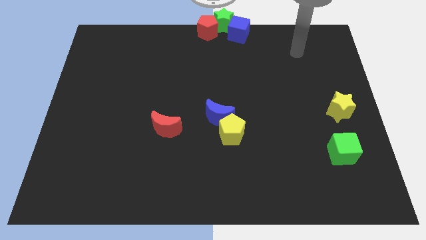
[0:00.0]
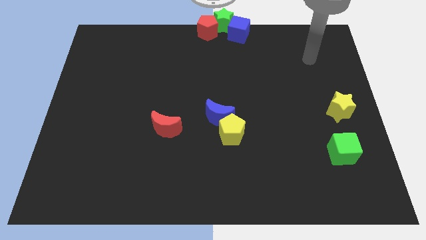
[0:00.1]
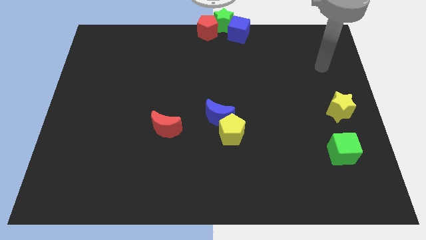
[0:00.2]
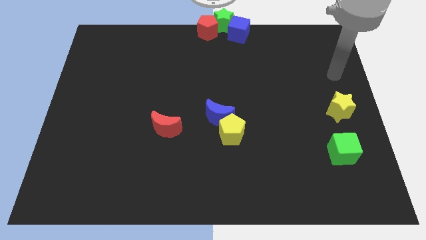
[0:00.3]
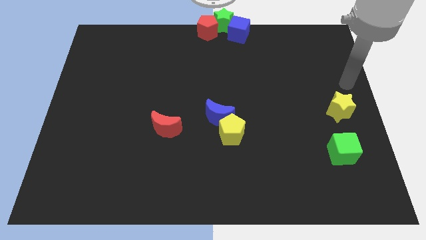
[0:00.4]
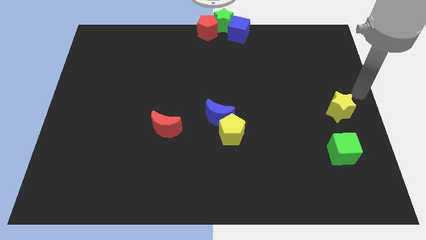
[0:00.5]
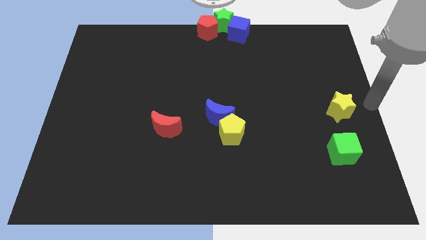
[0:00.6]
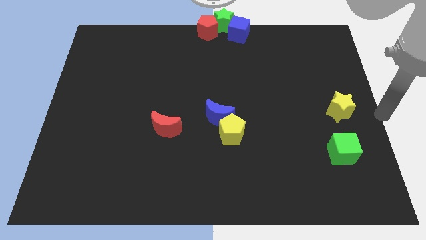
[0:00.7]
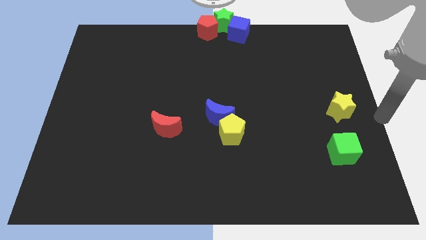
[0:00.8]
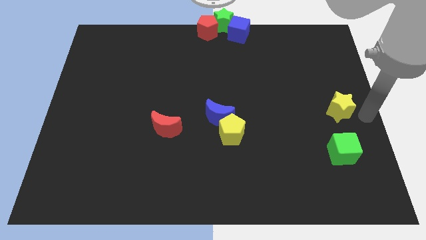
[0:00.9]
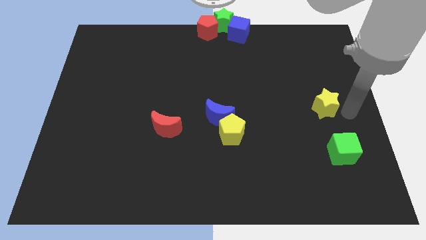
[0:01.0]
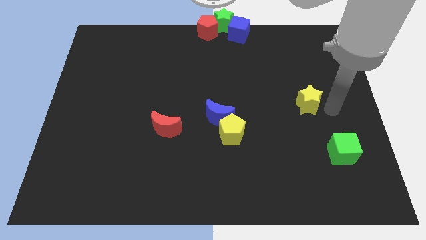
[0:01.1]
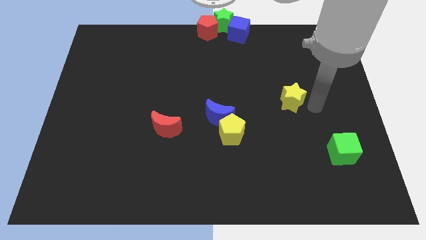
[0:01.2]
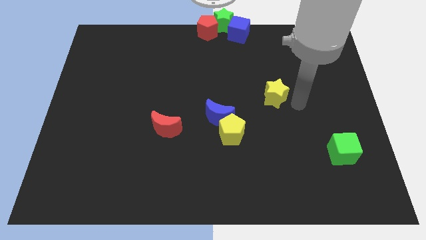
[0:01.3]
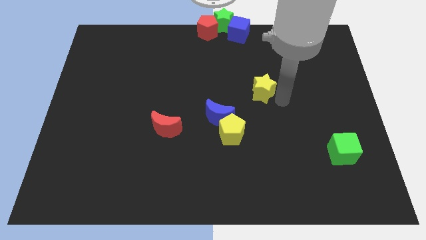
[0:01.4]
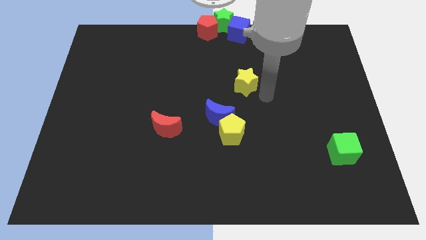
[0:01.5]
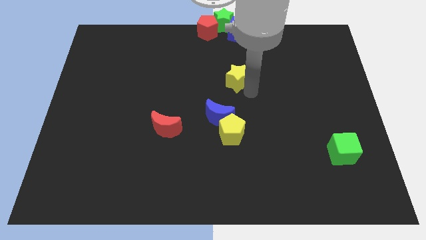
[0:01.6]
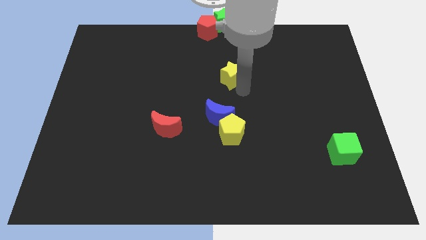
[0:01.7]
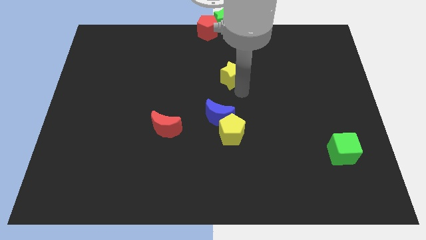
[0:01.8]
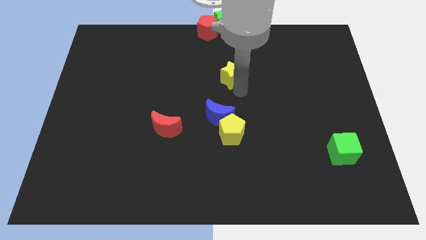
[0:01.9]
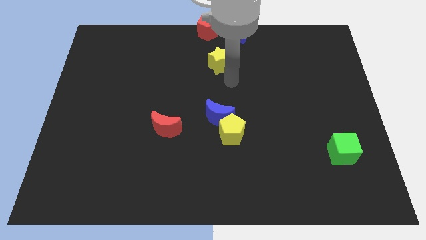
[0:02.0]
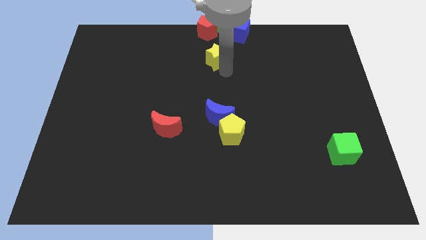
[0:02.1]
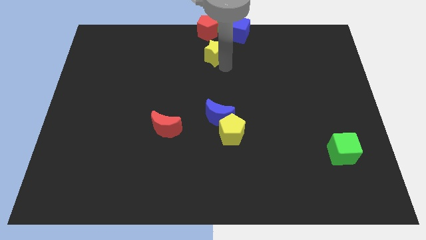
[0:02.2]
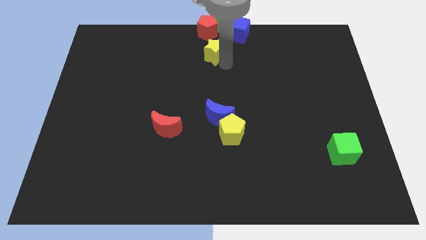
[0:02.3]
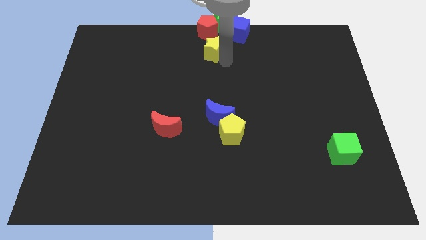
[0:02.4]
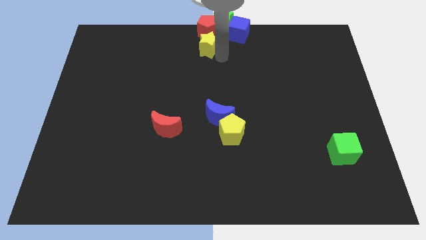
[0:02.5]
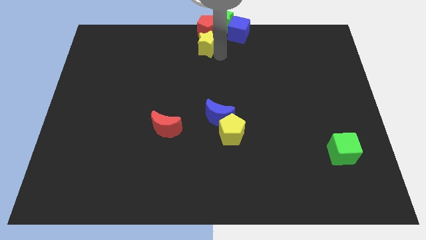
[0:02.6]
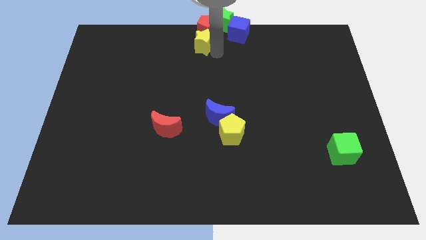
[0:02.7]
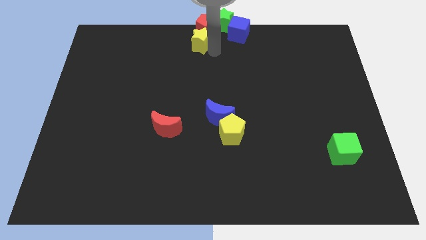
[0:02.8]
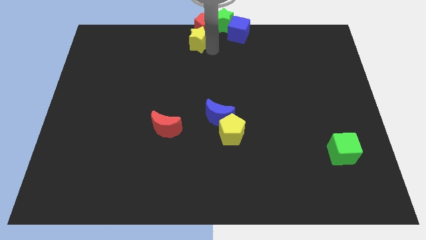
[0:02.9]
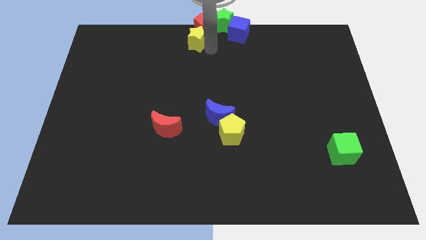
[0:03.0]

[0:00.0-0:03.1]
push the yellow star into the red pentagon

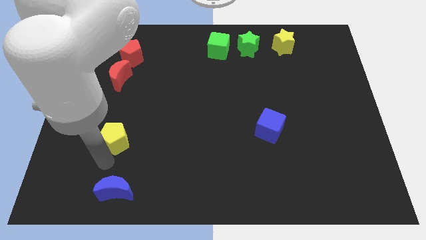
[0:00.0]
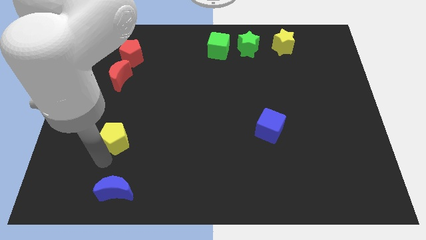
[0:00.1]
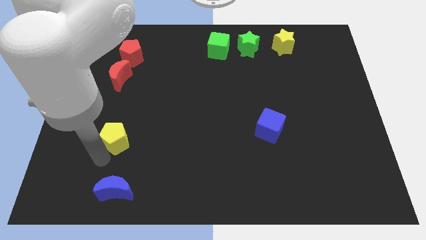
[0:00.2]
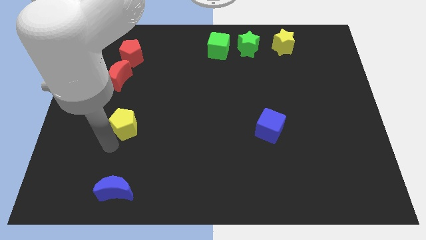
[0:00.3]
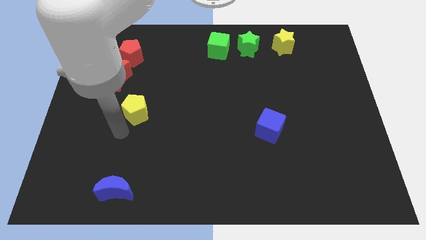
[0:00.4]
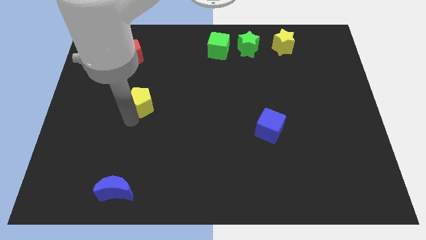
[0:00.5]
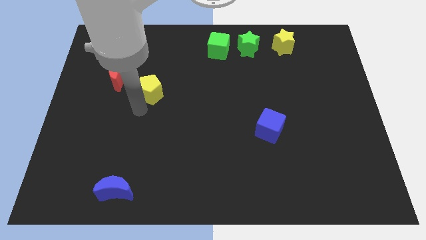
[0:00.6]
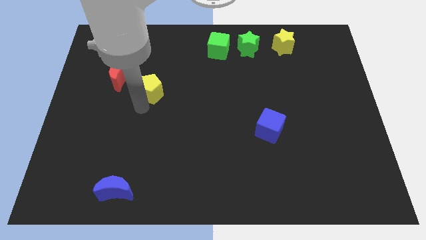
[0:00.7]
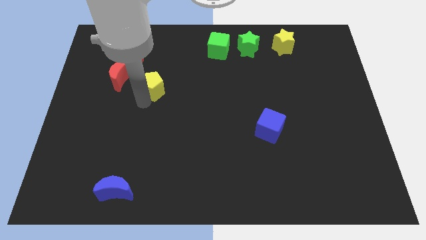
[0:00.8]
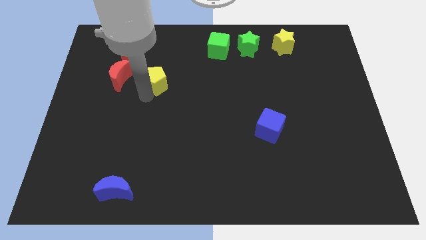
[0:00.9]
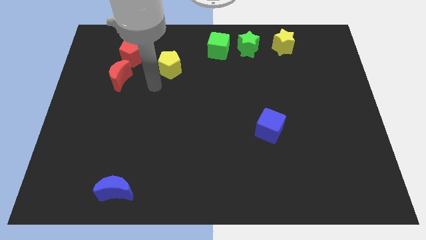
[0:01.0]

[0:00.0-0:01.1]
place the yellow pentagon right to the red moon

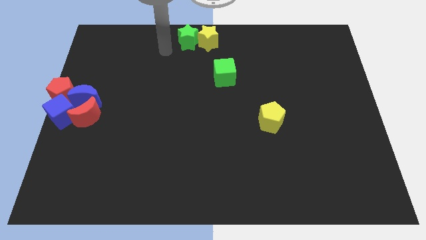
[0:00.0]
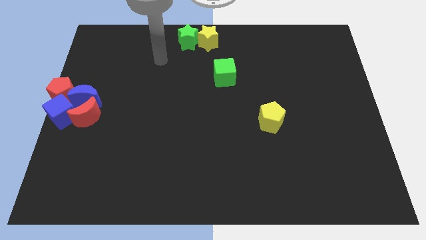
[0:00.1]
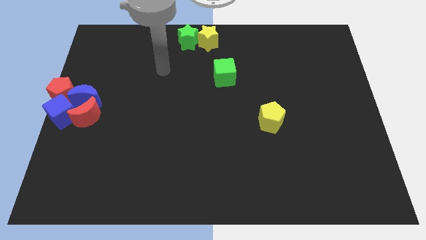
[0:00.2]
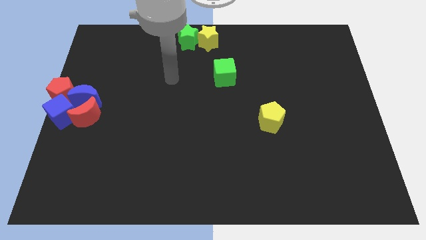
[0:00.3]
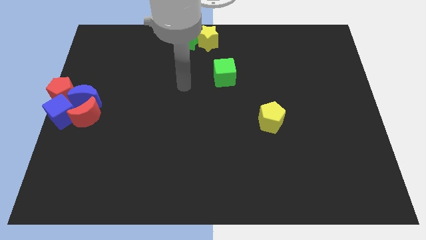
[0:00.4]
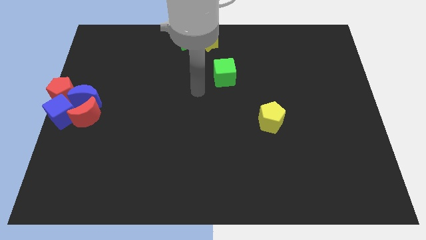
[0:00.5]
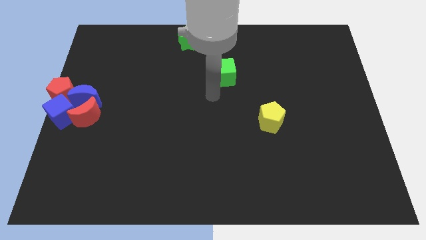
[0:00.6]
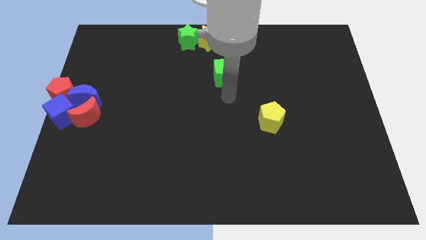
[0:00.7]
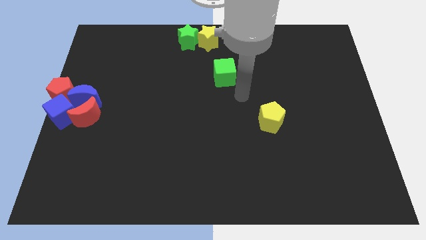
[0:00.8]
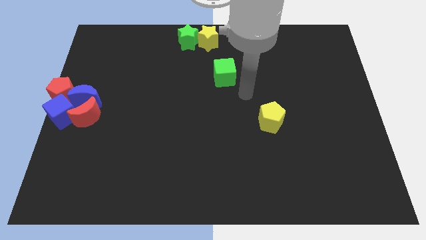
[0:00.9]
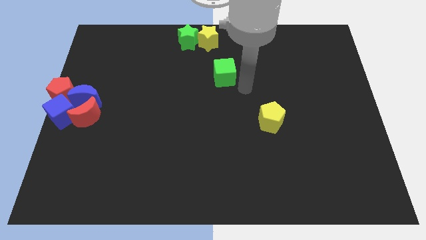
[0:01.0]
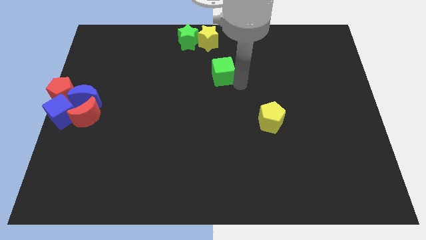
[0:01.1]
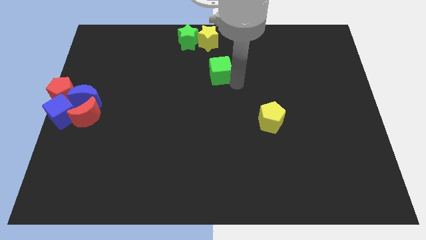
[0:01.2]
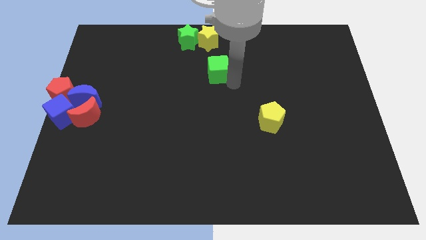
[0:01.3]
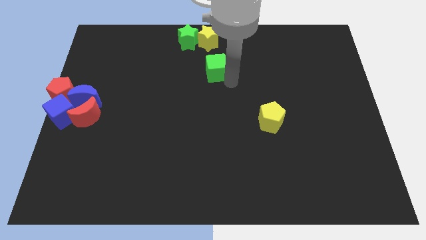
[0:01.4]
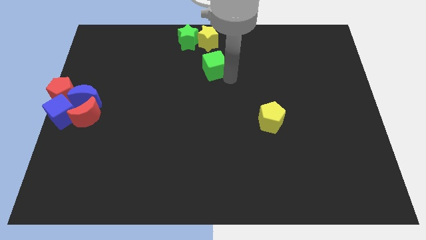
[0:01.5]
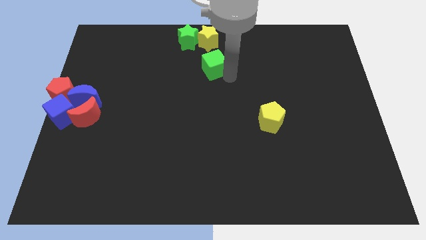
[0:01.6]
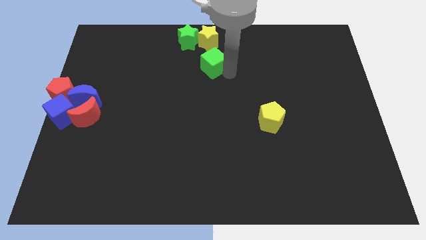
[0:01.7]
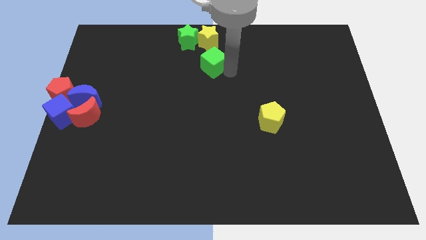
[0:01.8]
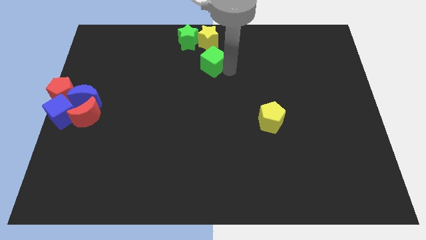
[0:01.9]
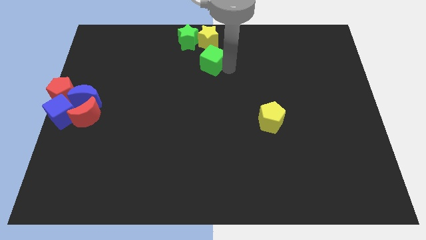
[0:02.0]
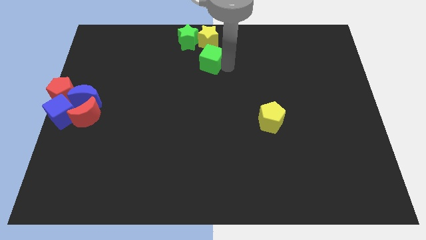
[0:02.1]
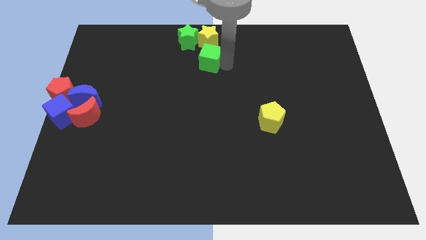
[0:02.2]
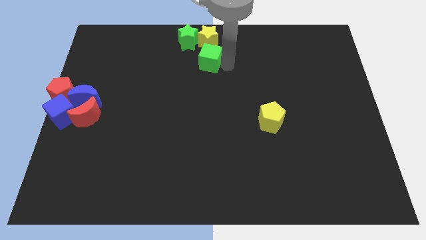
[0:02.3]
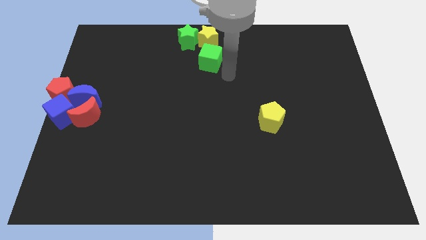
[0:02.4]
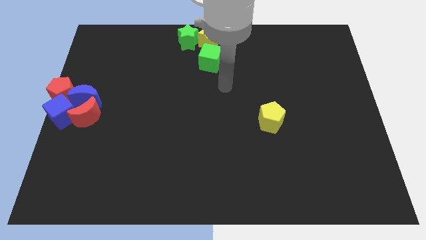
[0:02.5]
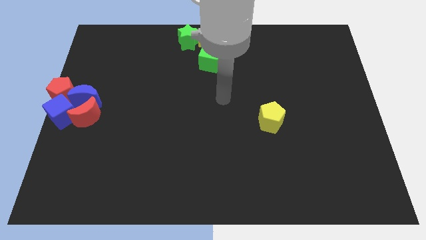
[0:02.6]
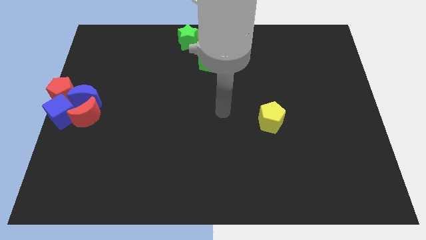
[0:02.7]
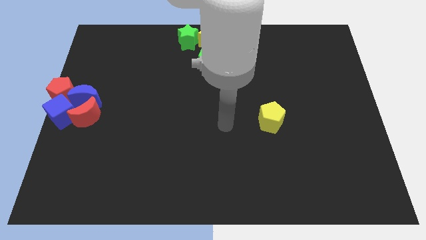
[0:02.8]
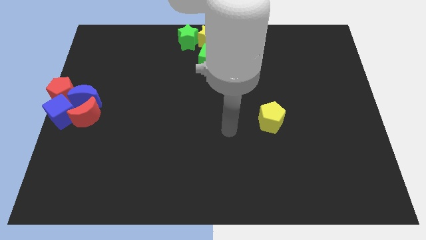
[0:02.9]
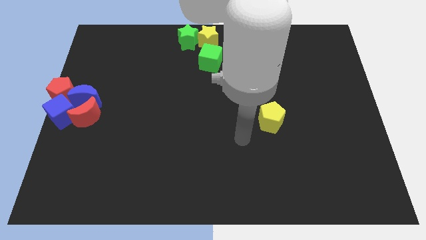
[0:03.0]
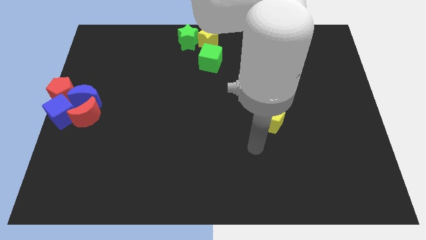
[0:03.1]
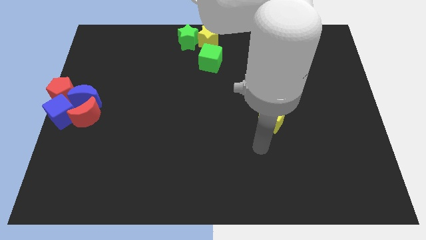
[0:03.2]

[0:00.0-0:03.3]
place the green cube below the yellow star

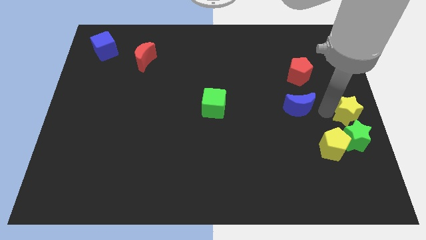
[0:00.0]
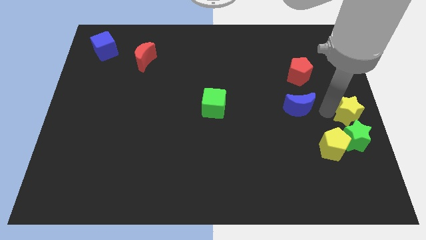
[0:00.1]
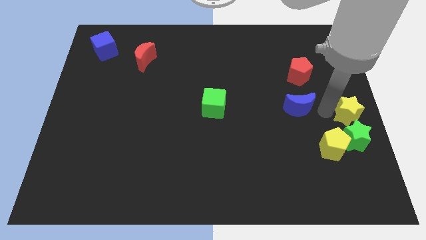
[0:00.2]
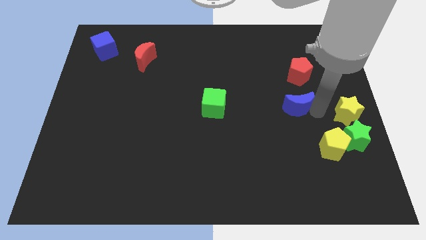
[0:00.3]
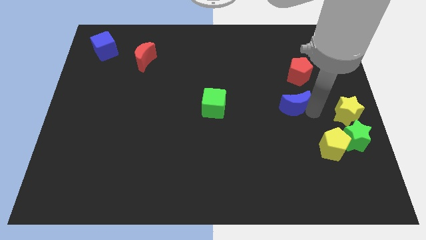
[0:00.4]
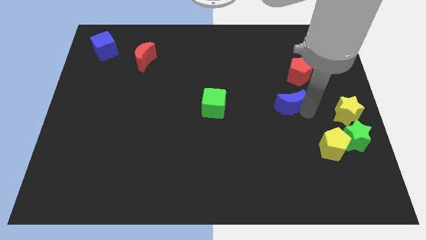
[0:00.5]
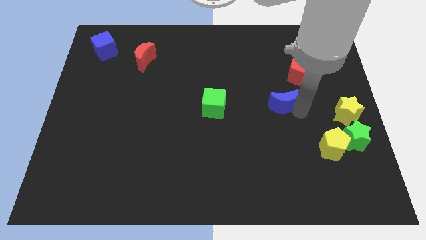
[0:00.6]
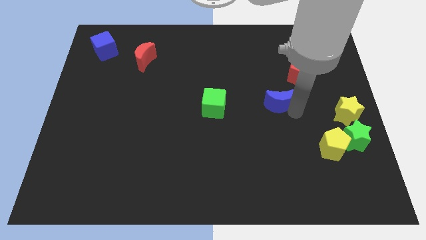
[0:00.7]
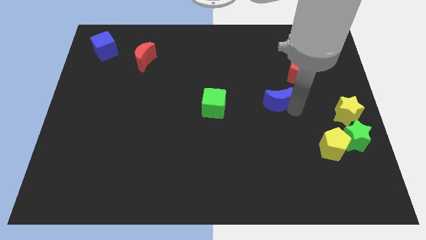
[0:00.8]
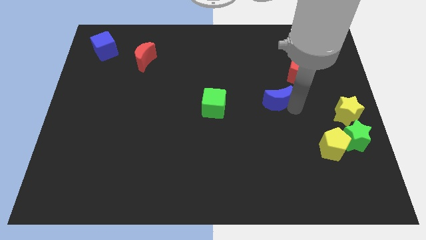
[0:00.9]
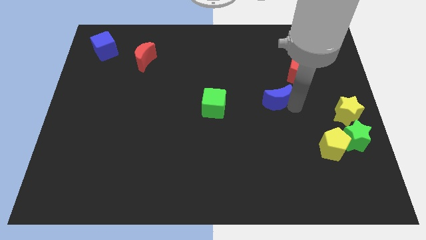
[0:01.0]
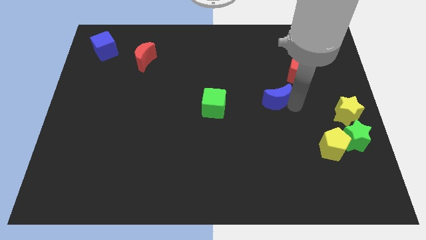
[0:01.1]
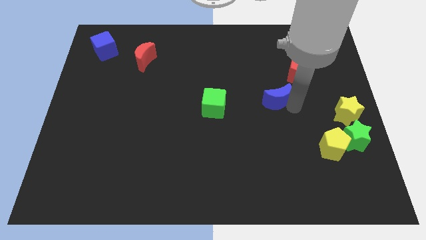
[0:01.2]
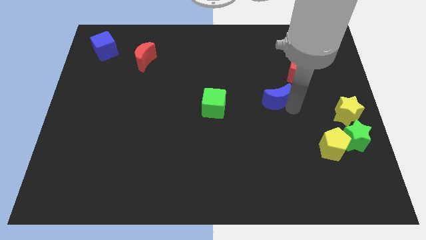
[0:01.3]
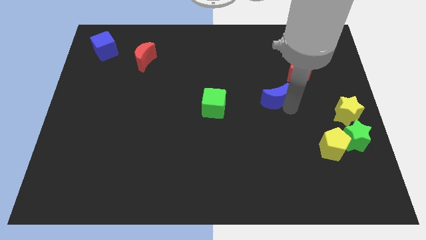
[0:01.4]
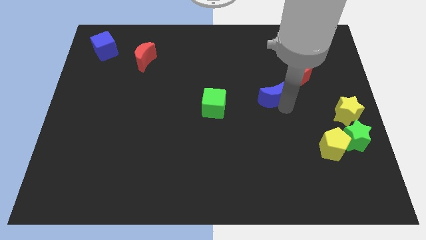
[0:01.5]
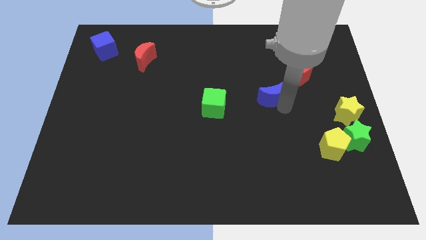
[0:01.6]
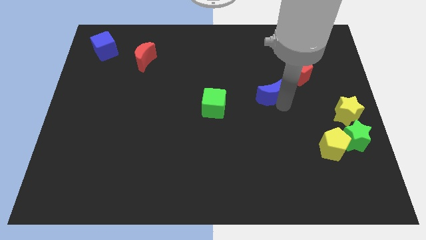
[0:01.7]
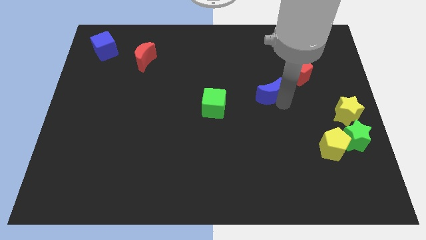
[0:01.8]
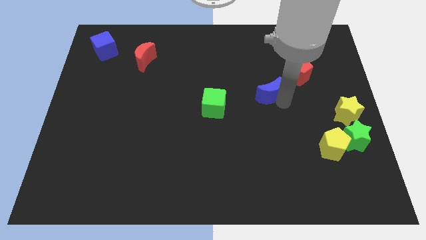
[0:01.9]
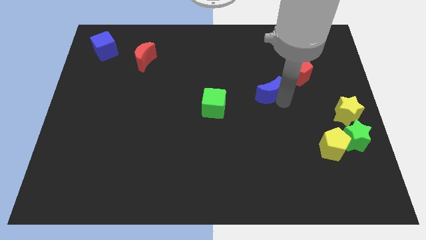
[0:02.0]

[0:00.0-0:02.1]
put the blue moon between the green cube and red pentagon
